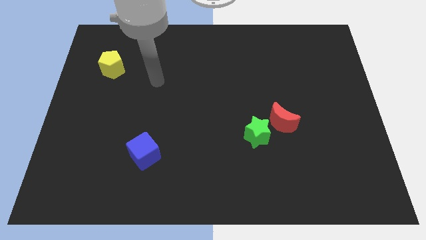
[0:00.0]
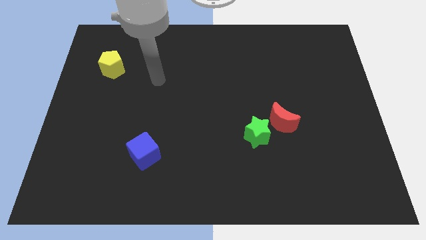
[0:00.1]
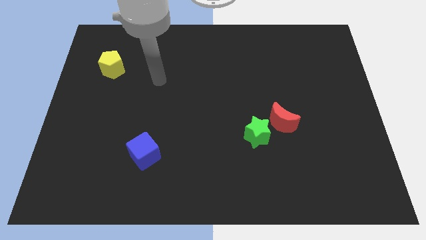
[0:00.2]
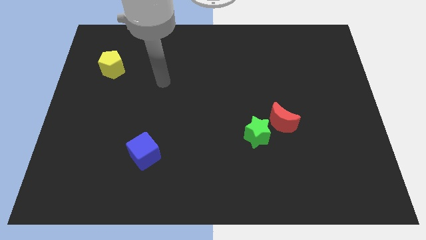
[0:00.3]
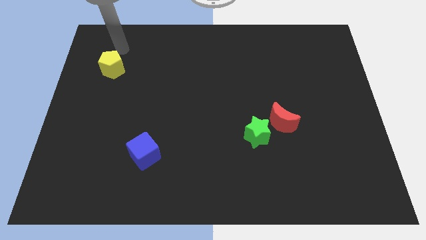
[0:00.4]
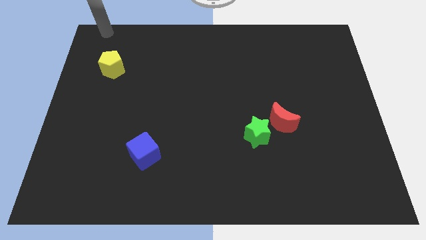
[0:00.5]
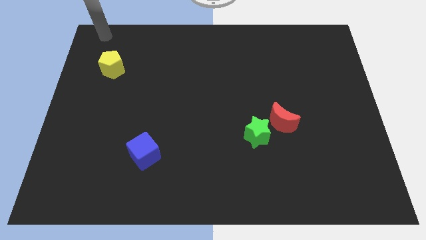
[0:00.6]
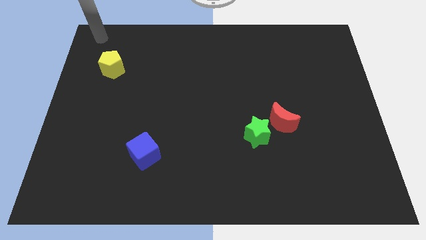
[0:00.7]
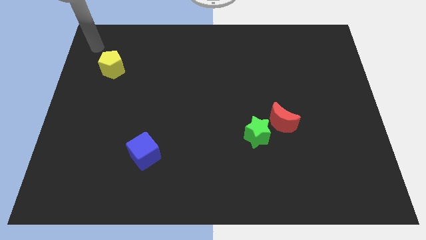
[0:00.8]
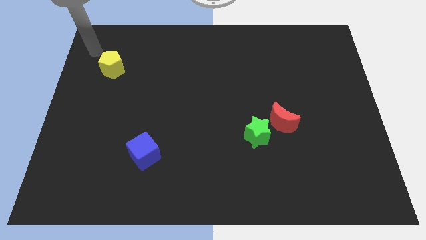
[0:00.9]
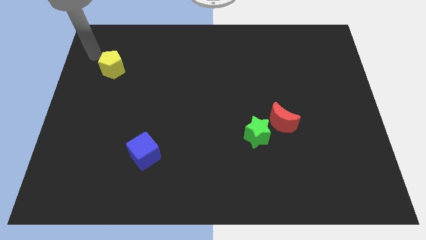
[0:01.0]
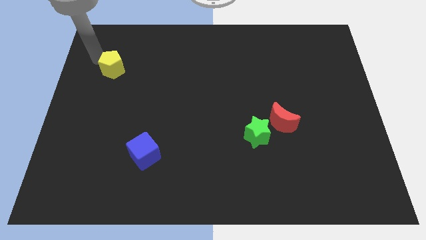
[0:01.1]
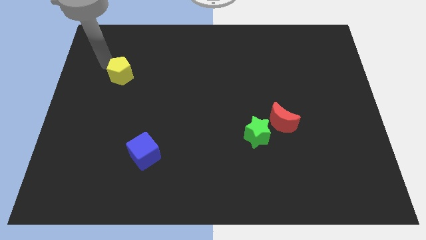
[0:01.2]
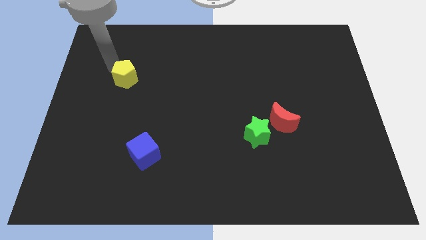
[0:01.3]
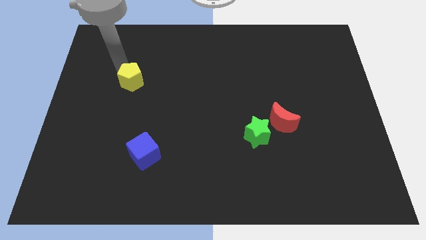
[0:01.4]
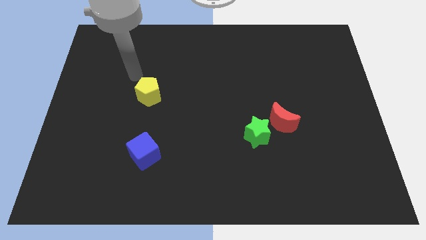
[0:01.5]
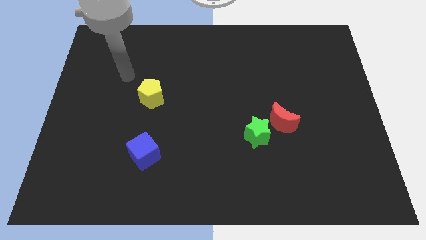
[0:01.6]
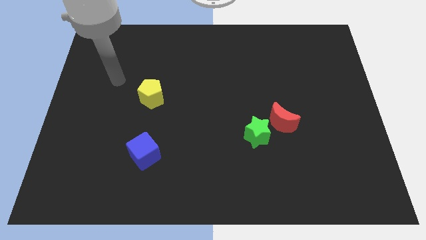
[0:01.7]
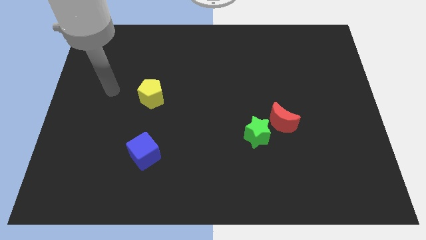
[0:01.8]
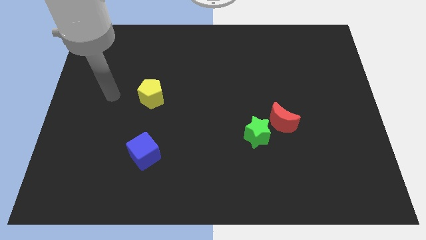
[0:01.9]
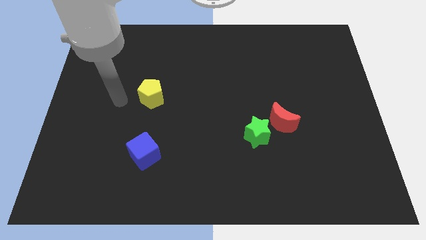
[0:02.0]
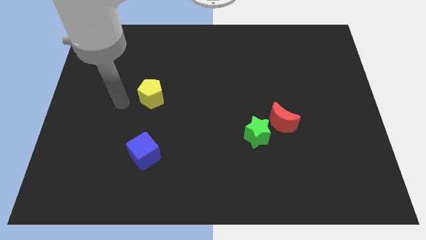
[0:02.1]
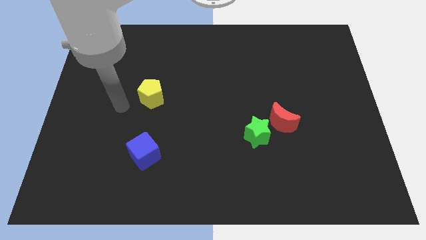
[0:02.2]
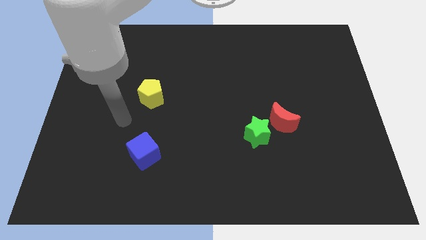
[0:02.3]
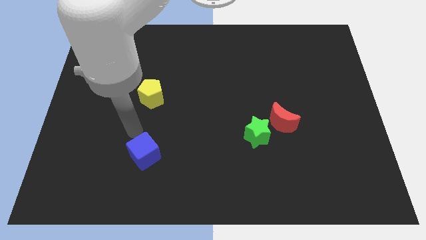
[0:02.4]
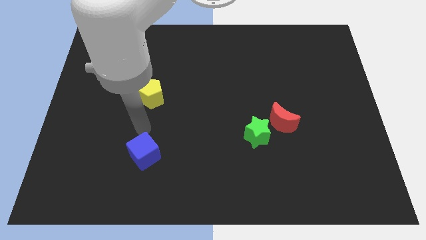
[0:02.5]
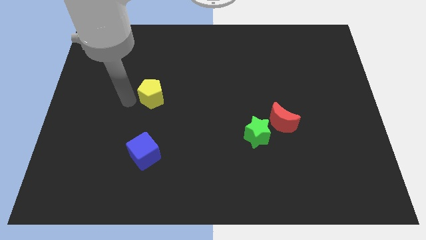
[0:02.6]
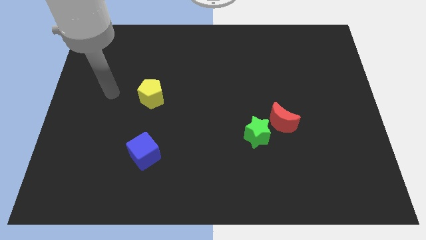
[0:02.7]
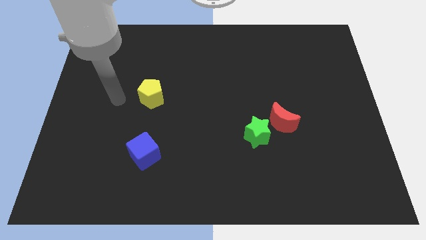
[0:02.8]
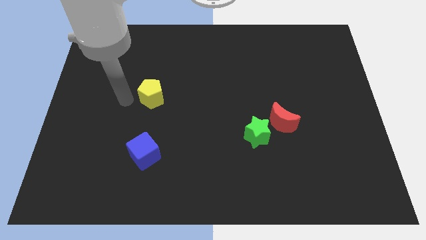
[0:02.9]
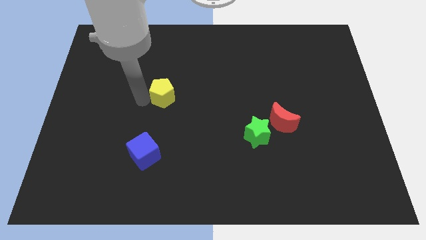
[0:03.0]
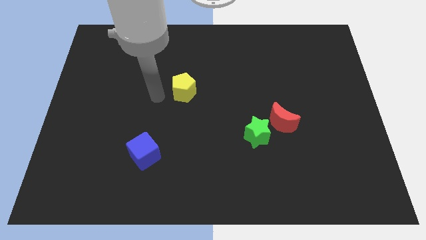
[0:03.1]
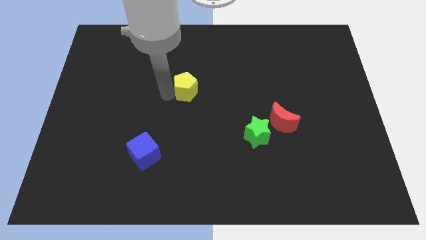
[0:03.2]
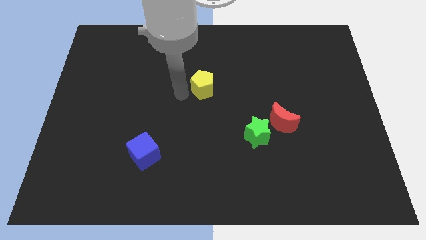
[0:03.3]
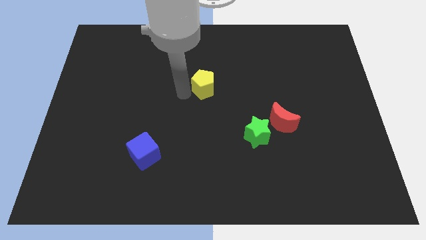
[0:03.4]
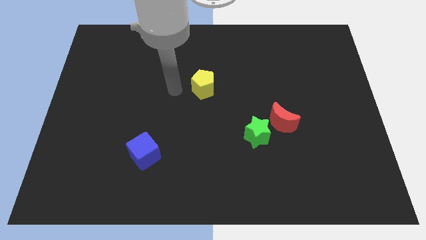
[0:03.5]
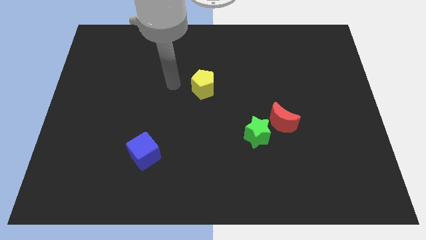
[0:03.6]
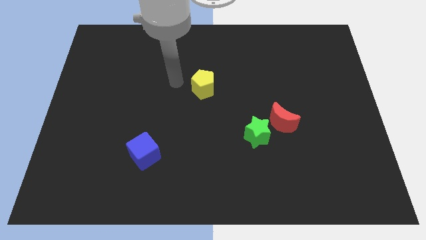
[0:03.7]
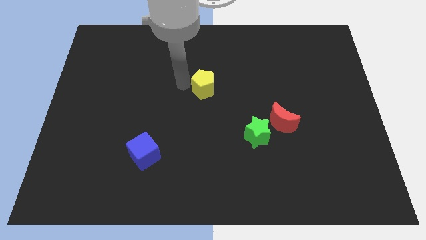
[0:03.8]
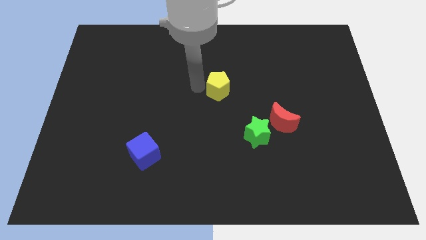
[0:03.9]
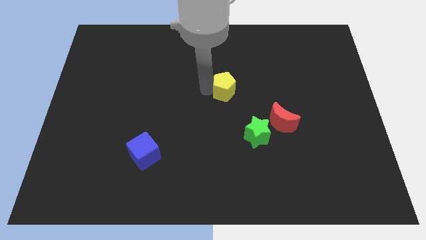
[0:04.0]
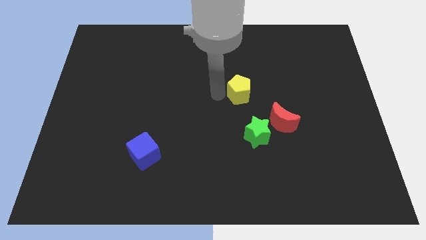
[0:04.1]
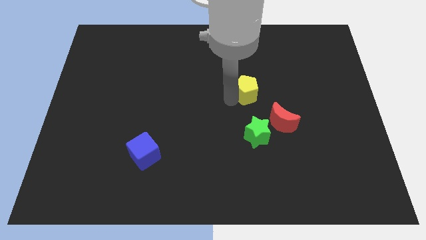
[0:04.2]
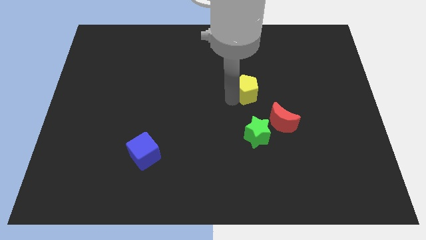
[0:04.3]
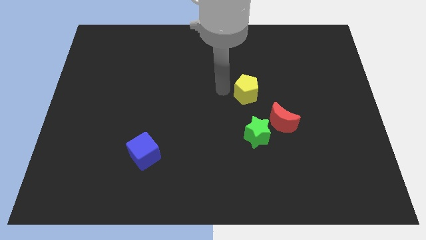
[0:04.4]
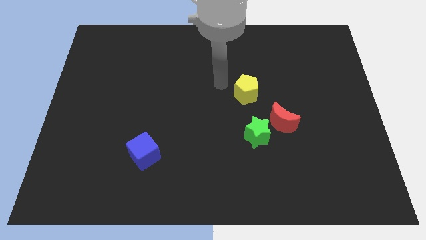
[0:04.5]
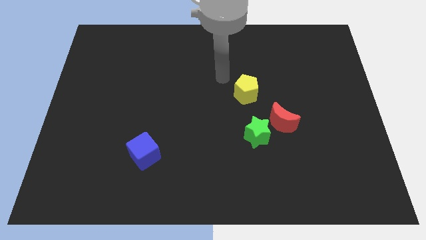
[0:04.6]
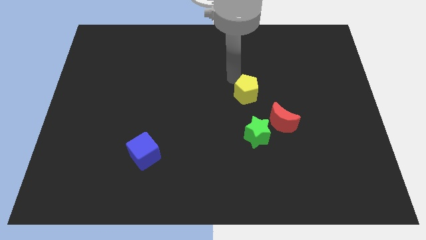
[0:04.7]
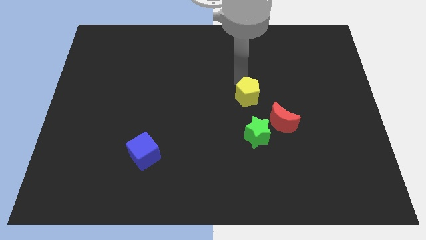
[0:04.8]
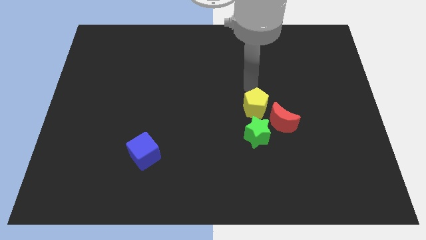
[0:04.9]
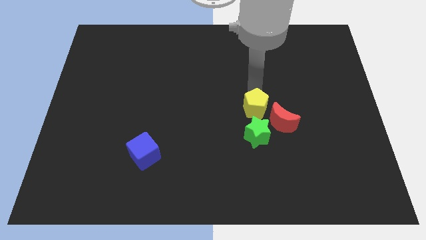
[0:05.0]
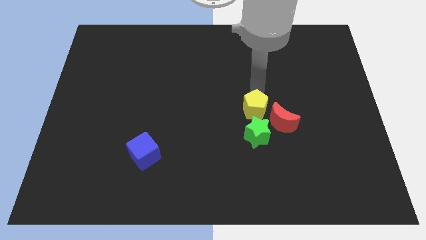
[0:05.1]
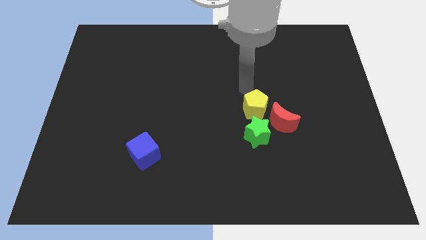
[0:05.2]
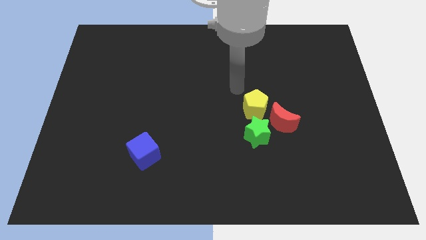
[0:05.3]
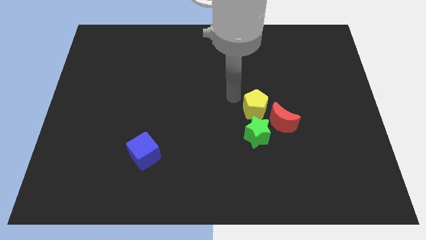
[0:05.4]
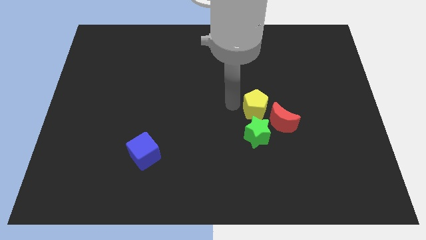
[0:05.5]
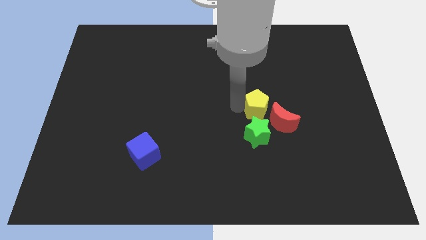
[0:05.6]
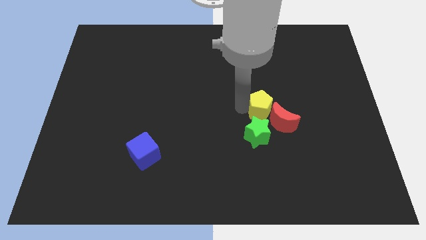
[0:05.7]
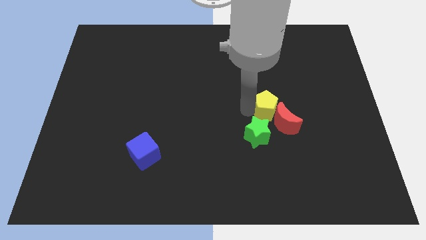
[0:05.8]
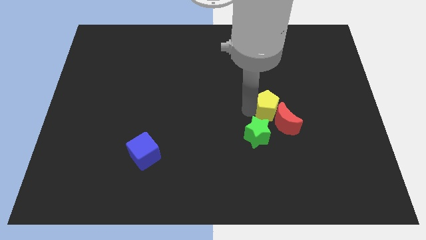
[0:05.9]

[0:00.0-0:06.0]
put the pentagon to the moon

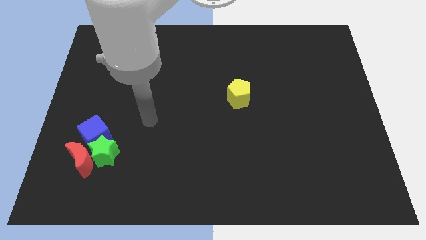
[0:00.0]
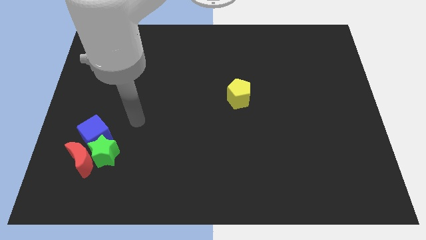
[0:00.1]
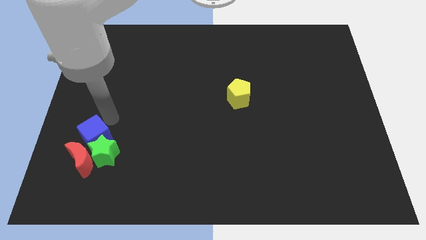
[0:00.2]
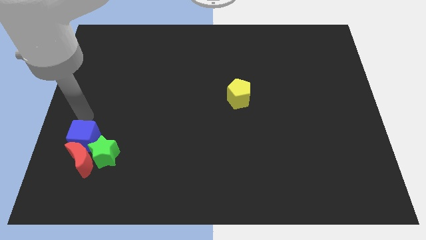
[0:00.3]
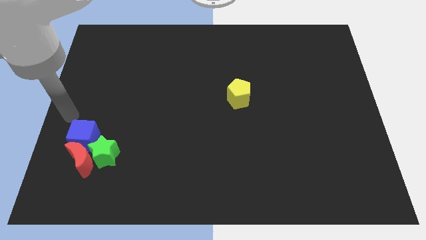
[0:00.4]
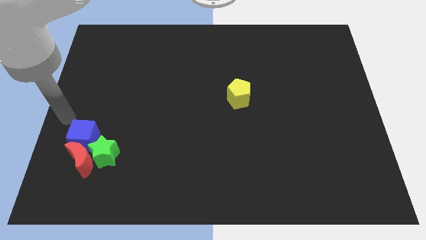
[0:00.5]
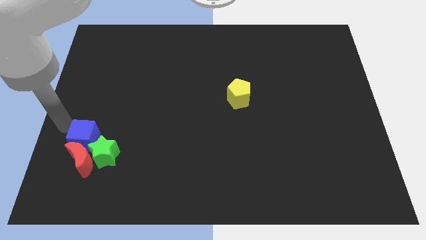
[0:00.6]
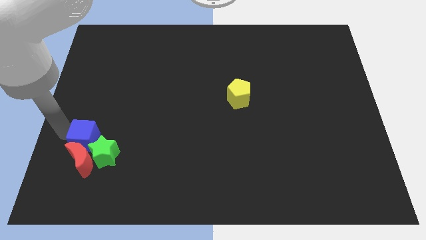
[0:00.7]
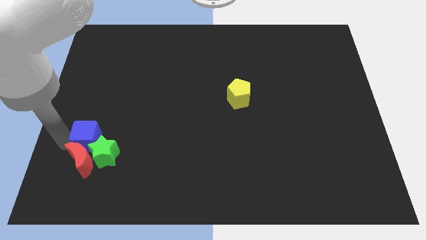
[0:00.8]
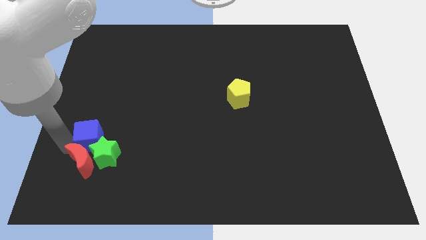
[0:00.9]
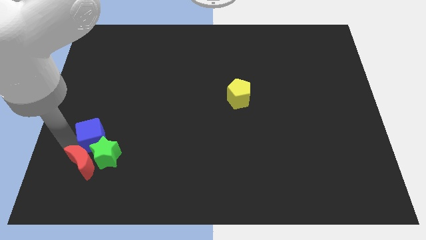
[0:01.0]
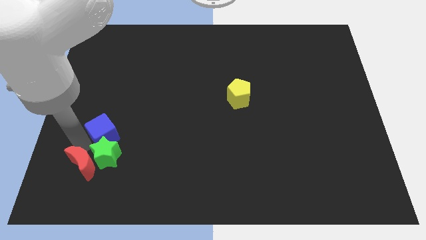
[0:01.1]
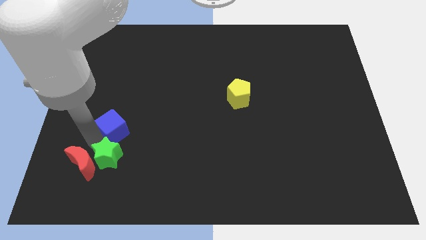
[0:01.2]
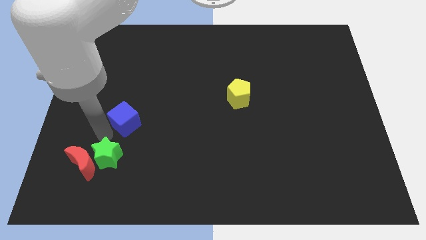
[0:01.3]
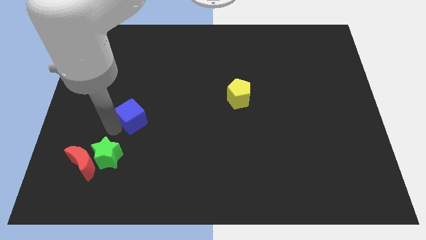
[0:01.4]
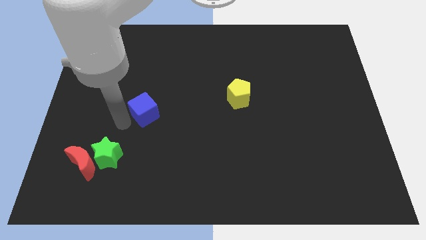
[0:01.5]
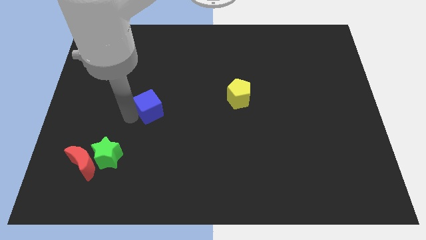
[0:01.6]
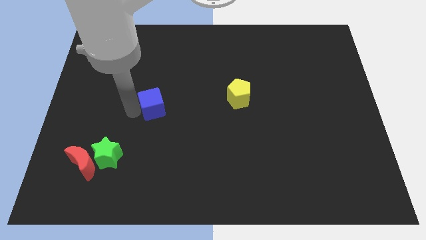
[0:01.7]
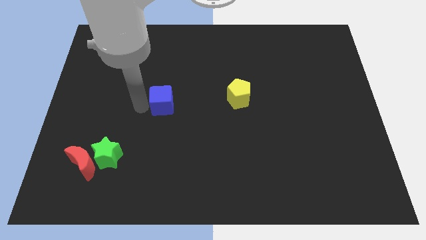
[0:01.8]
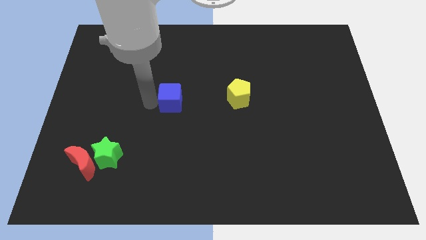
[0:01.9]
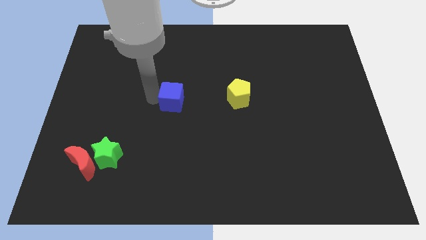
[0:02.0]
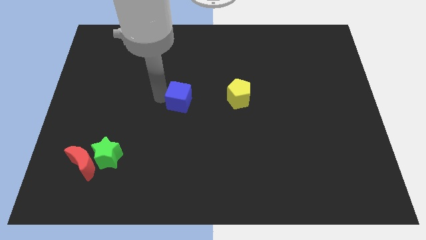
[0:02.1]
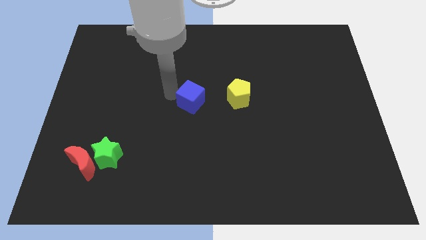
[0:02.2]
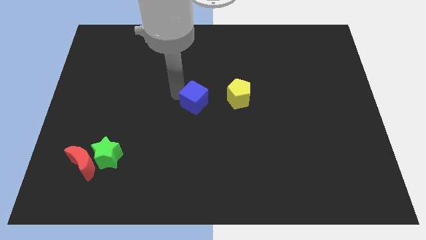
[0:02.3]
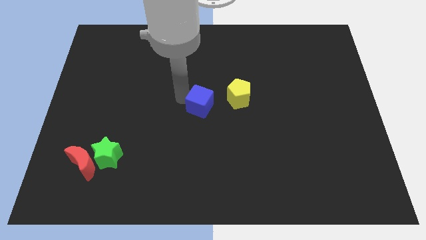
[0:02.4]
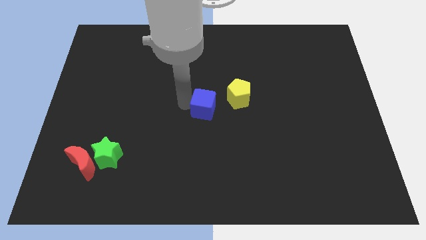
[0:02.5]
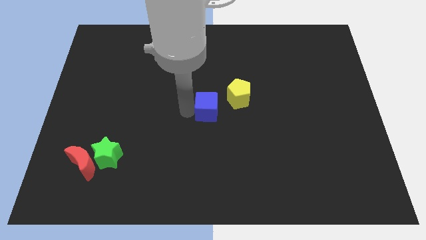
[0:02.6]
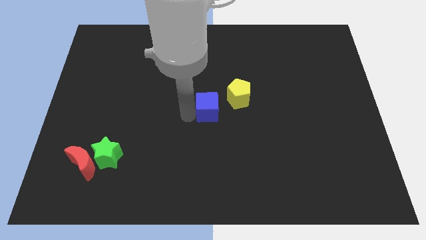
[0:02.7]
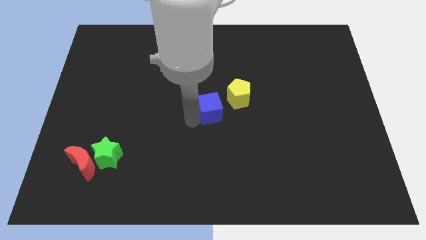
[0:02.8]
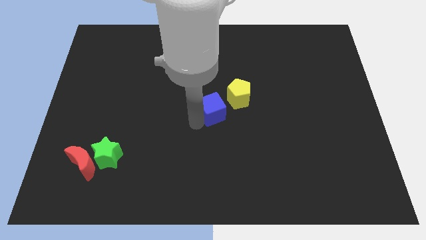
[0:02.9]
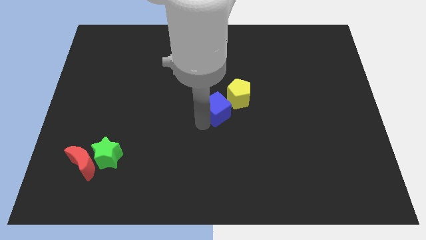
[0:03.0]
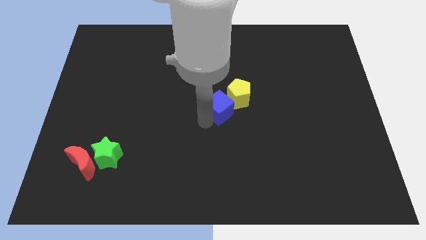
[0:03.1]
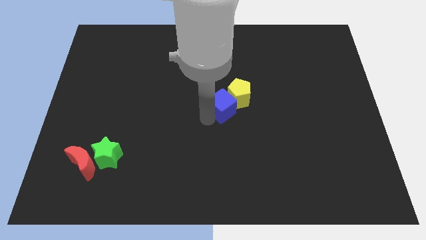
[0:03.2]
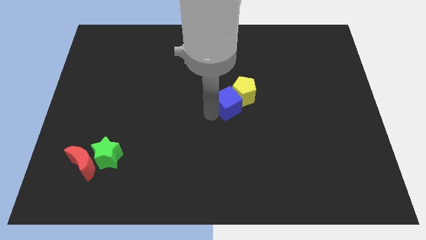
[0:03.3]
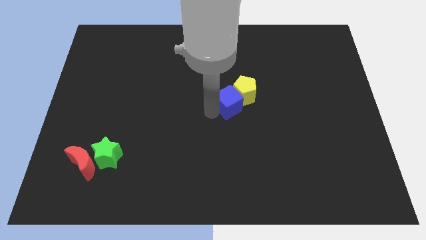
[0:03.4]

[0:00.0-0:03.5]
push the cube next to the yellow block
